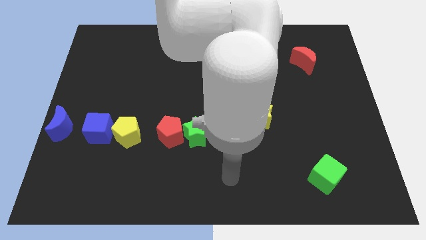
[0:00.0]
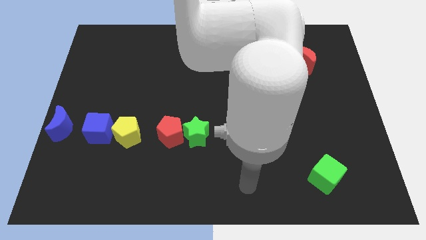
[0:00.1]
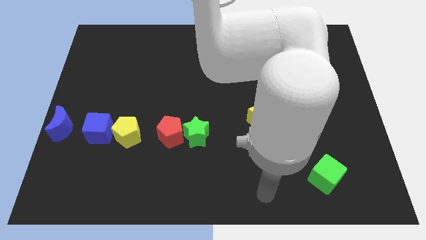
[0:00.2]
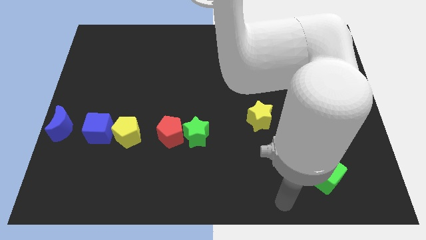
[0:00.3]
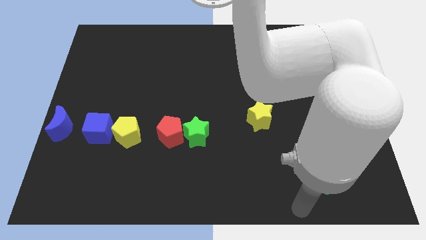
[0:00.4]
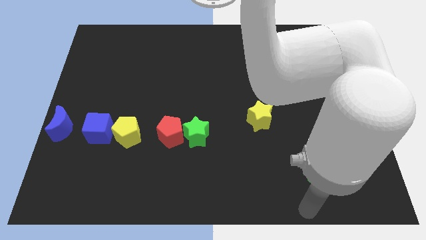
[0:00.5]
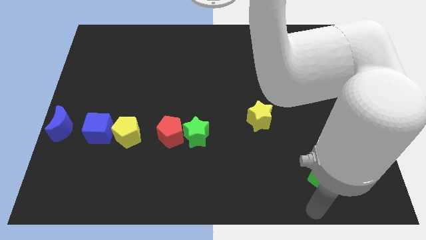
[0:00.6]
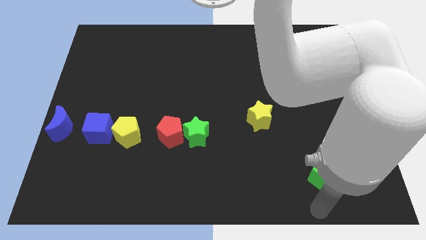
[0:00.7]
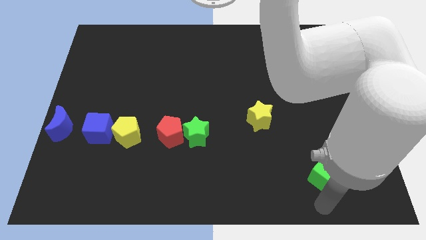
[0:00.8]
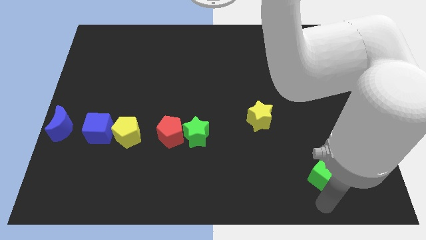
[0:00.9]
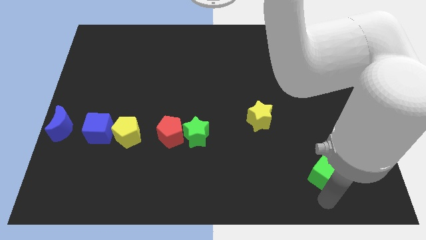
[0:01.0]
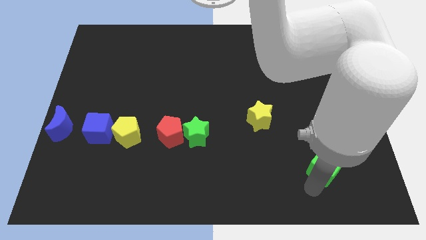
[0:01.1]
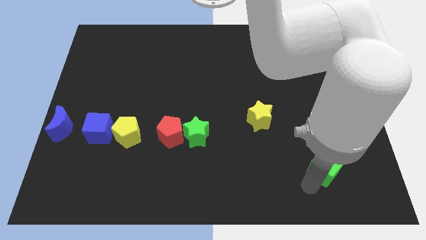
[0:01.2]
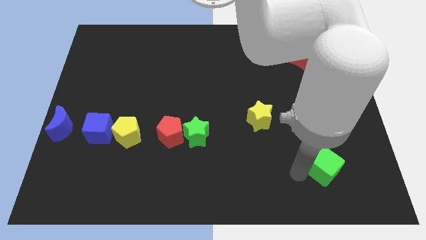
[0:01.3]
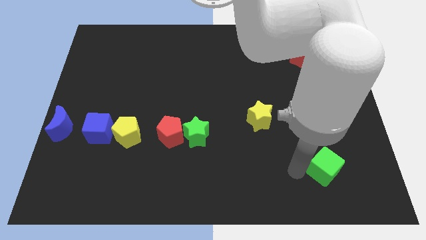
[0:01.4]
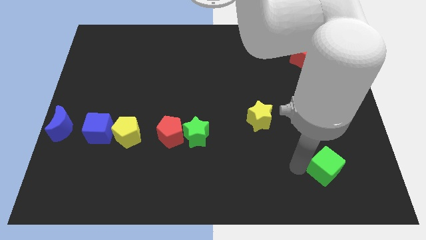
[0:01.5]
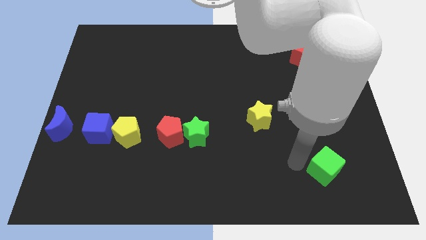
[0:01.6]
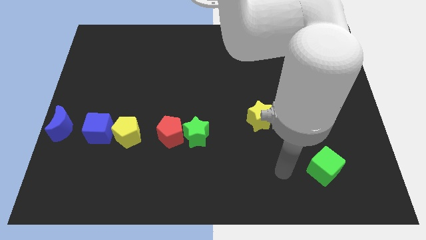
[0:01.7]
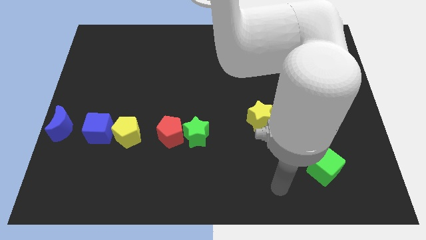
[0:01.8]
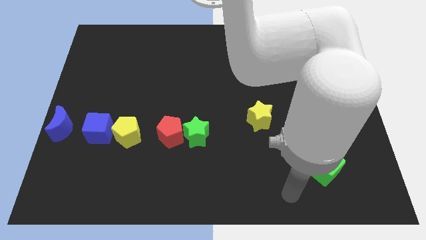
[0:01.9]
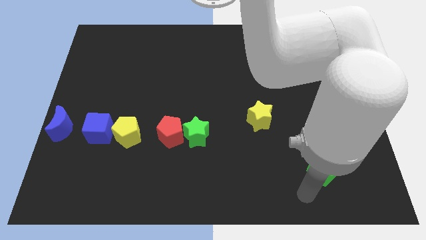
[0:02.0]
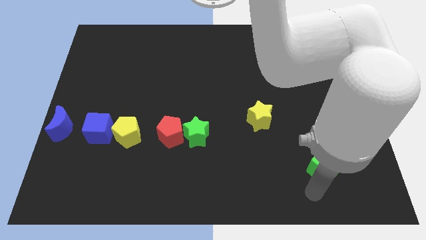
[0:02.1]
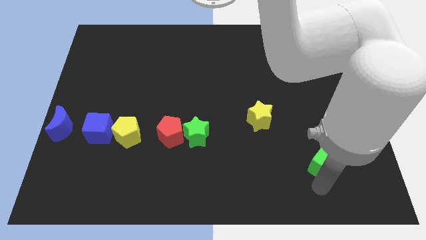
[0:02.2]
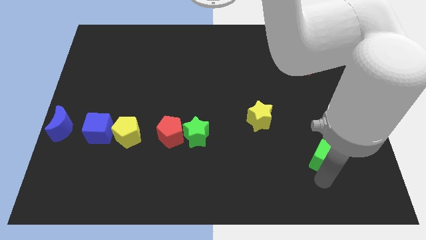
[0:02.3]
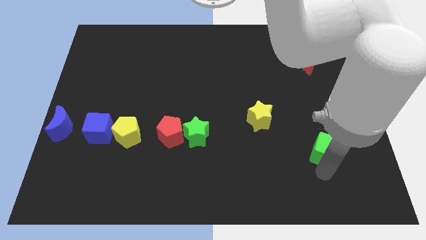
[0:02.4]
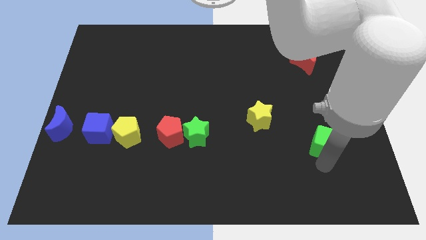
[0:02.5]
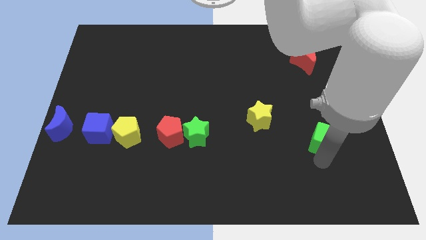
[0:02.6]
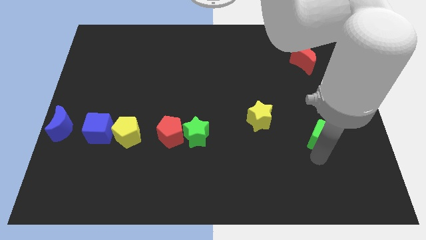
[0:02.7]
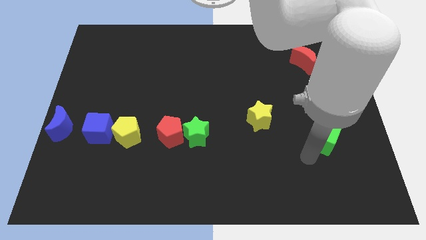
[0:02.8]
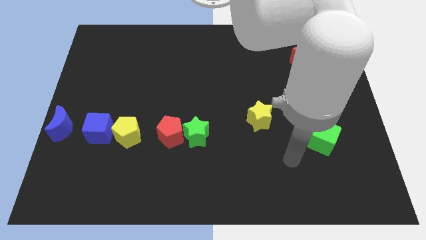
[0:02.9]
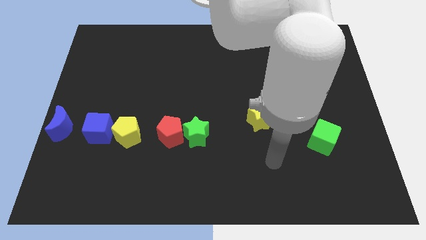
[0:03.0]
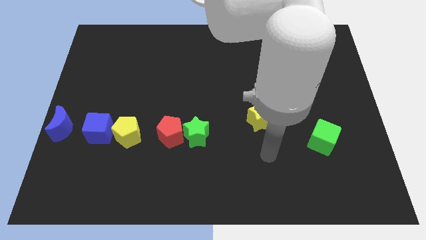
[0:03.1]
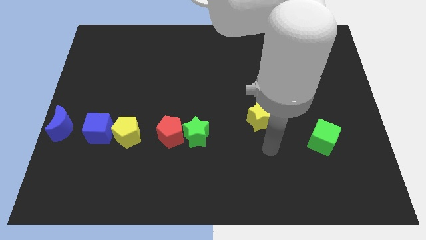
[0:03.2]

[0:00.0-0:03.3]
place the green cube parallel to the right of the green star

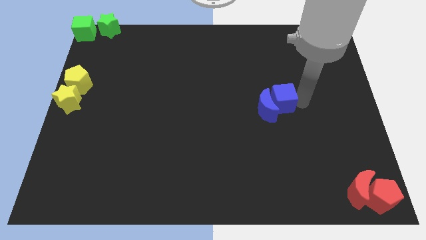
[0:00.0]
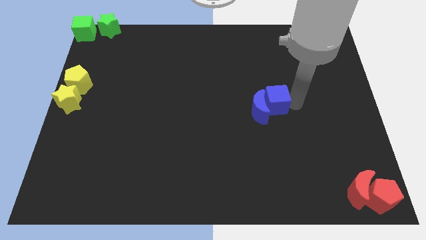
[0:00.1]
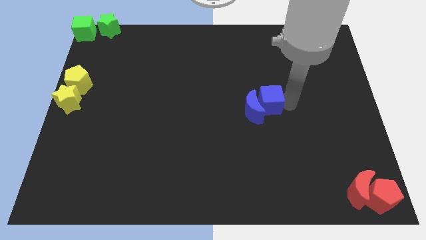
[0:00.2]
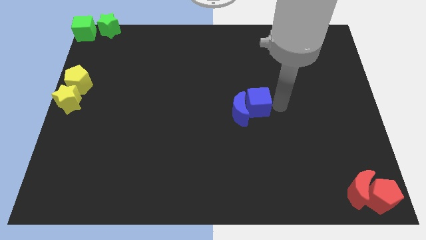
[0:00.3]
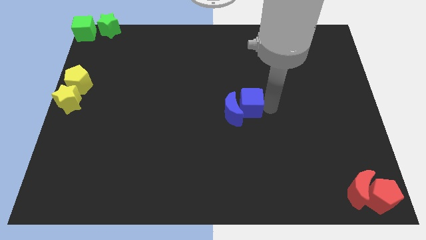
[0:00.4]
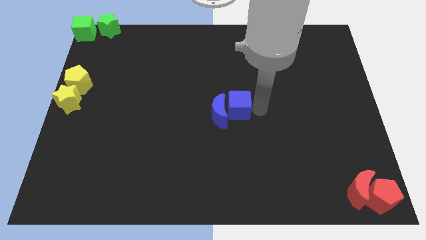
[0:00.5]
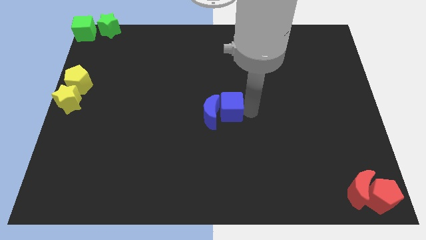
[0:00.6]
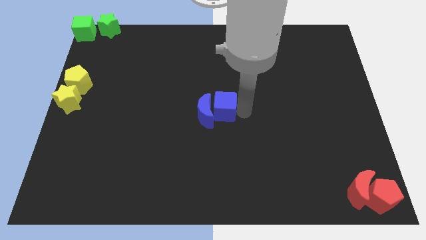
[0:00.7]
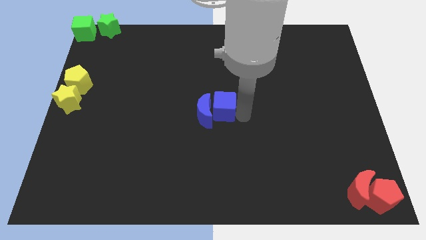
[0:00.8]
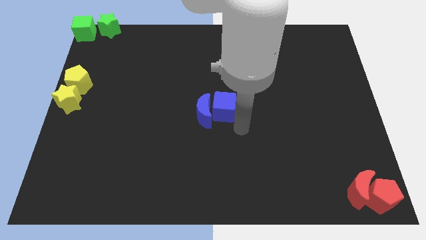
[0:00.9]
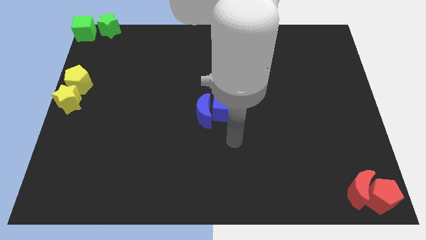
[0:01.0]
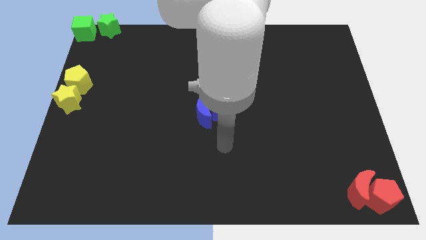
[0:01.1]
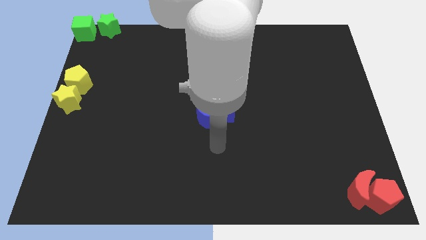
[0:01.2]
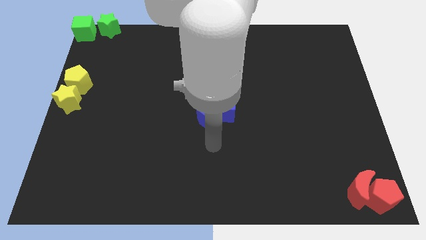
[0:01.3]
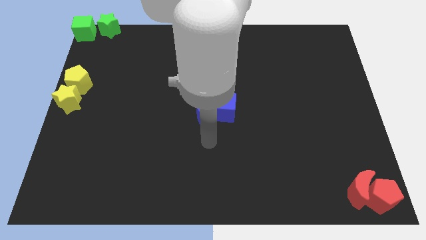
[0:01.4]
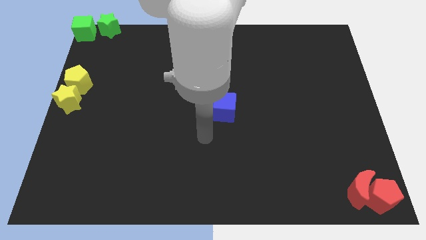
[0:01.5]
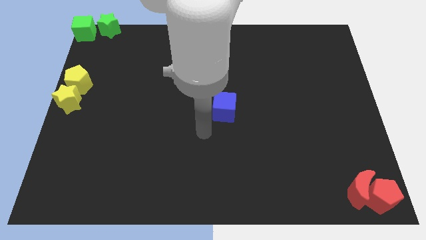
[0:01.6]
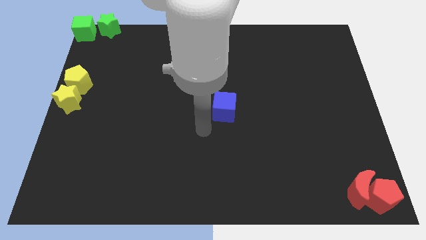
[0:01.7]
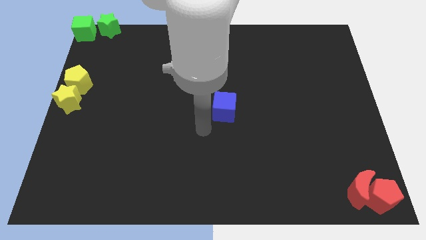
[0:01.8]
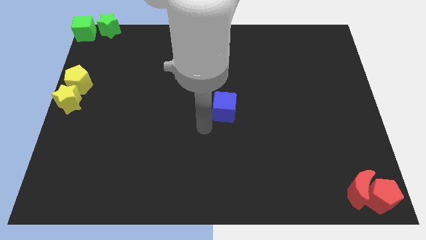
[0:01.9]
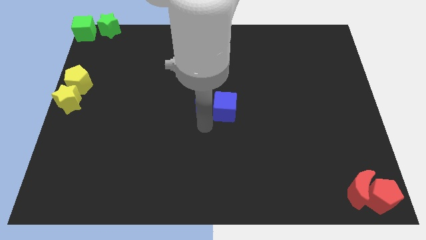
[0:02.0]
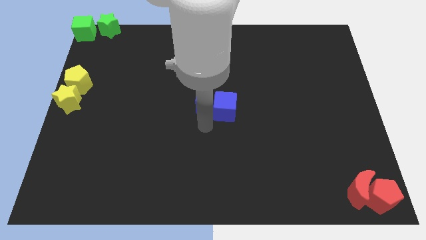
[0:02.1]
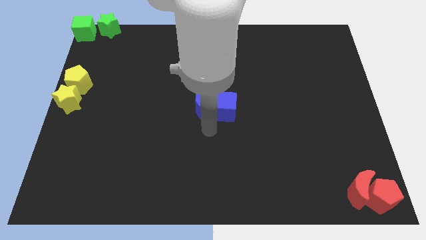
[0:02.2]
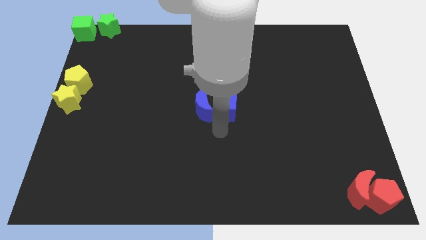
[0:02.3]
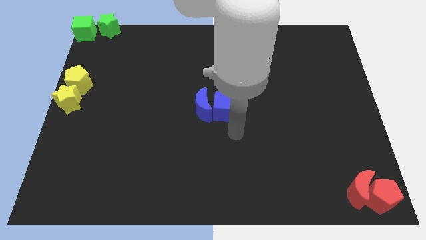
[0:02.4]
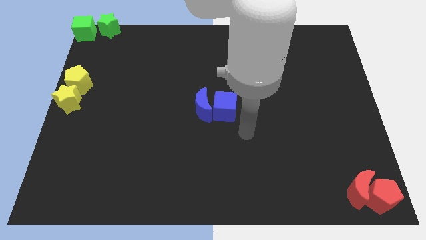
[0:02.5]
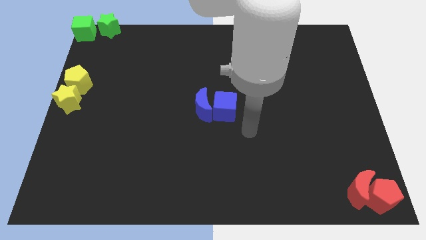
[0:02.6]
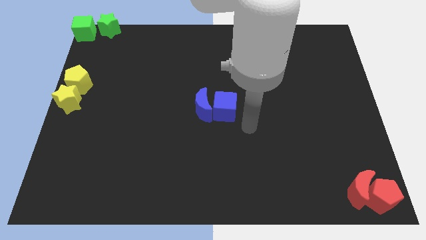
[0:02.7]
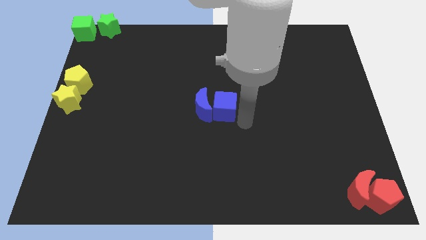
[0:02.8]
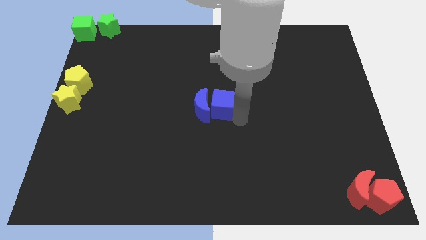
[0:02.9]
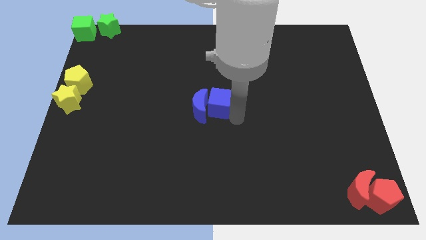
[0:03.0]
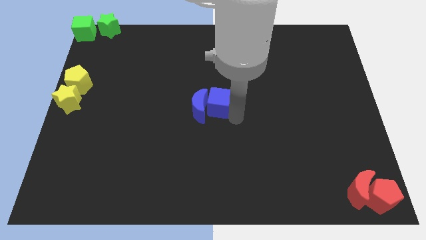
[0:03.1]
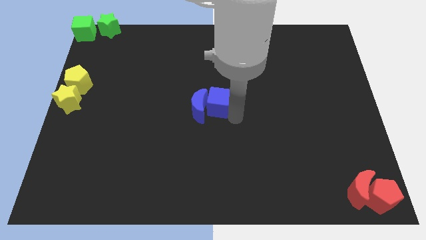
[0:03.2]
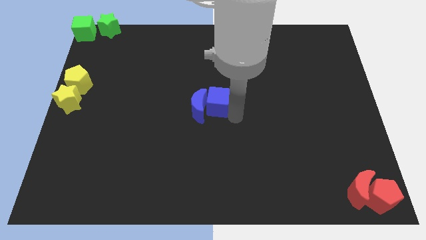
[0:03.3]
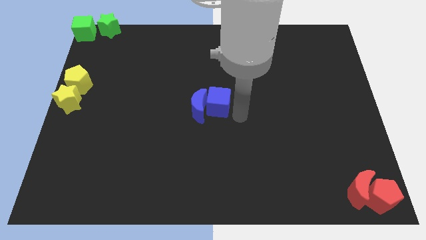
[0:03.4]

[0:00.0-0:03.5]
put the group of blue blocks at the center of the board

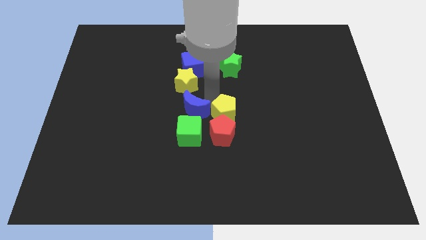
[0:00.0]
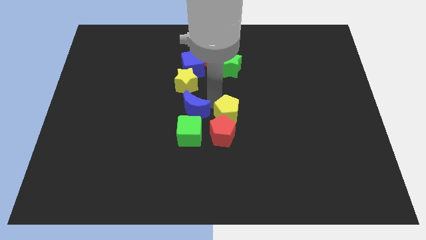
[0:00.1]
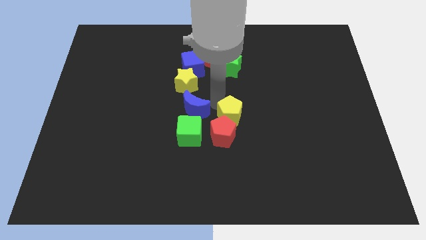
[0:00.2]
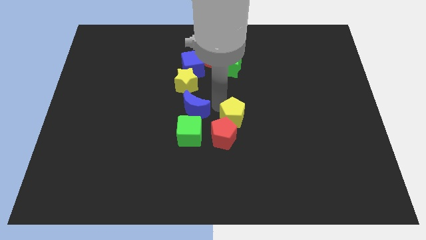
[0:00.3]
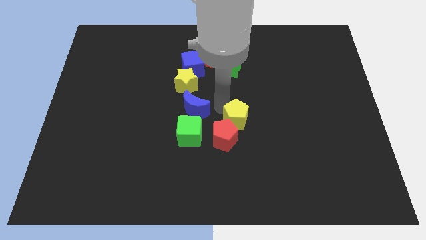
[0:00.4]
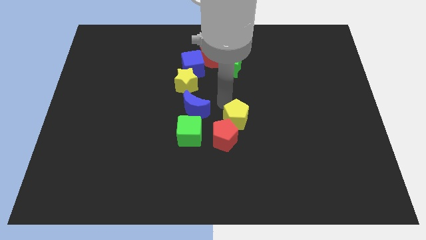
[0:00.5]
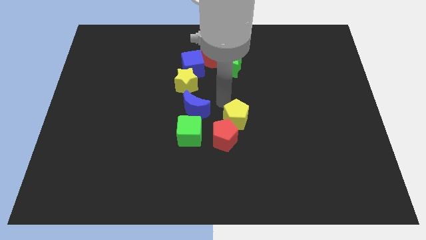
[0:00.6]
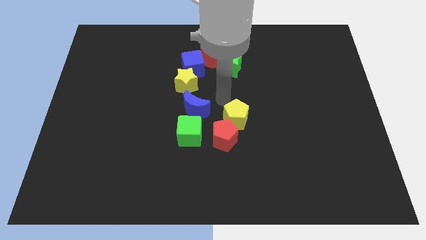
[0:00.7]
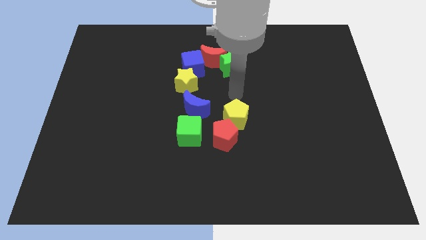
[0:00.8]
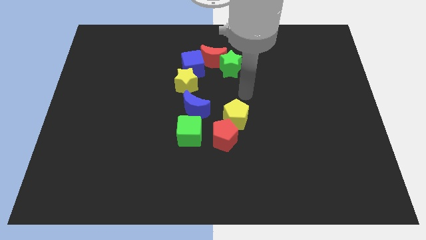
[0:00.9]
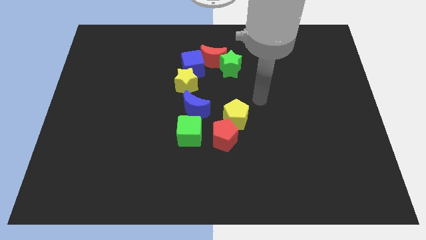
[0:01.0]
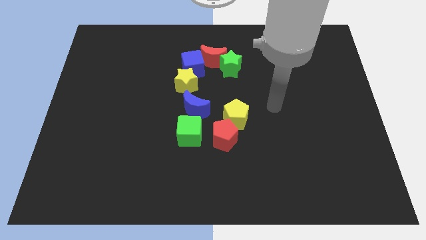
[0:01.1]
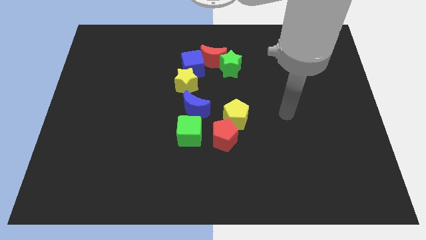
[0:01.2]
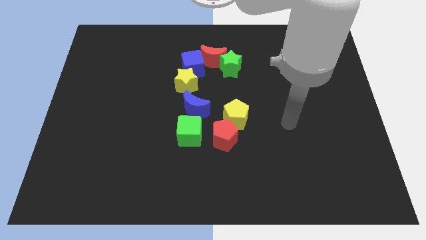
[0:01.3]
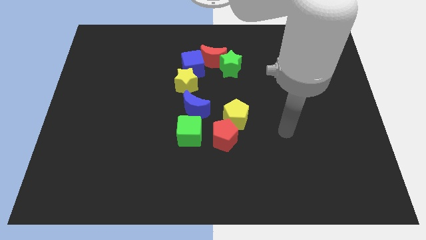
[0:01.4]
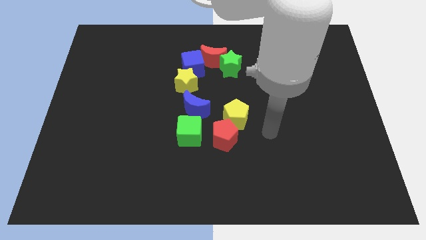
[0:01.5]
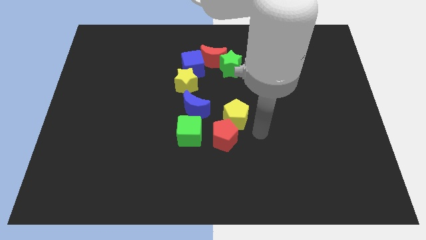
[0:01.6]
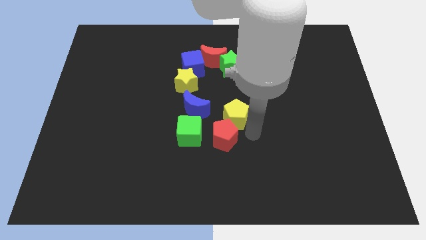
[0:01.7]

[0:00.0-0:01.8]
move the arm into the red pentagon

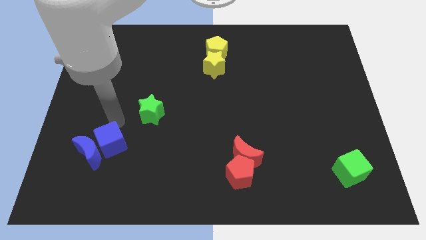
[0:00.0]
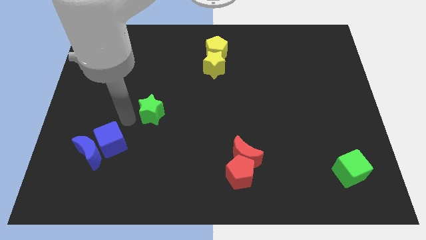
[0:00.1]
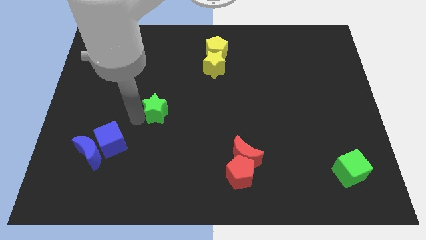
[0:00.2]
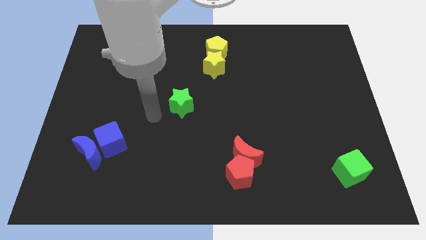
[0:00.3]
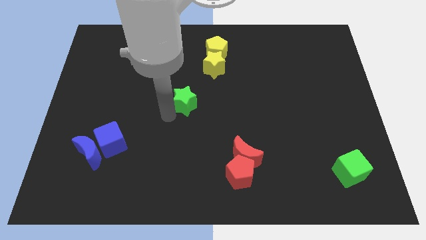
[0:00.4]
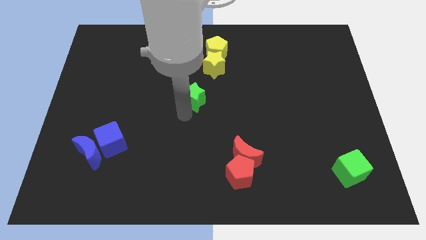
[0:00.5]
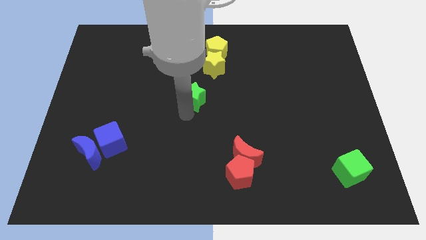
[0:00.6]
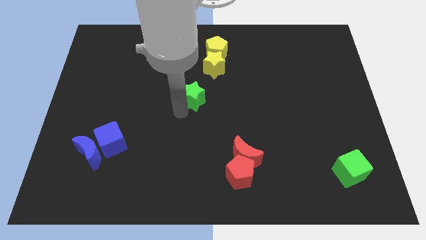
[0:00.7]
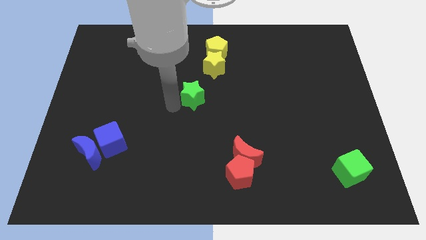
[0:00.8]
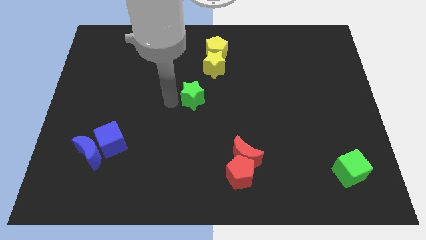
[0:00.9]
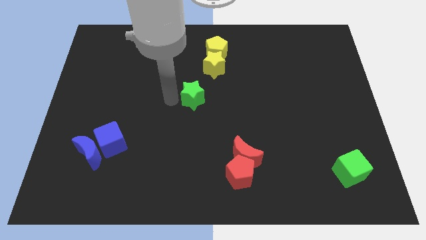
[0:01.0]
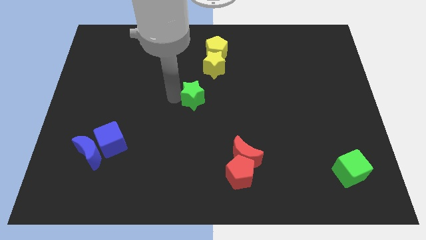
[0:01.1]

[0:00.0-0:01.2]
move the green star to the center of the board
